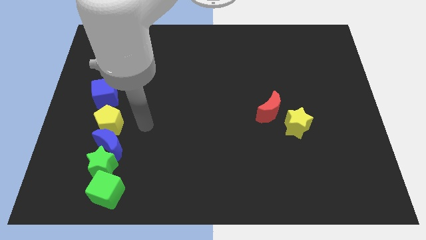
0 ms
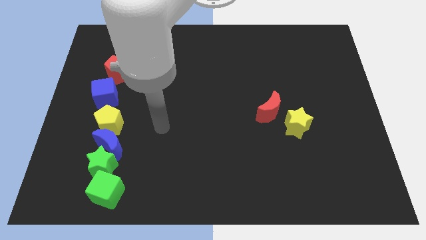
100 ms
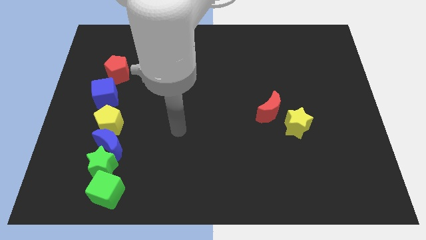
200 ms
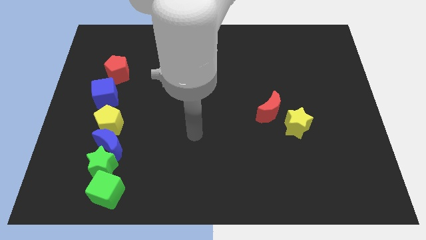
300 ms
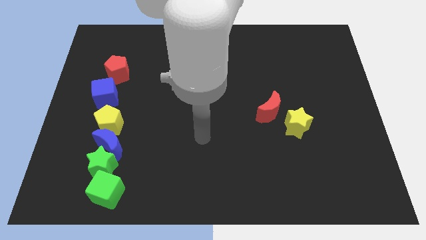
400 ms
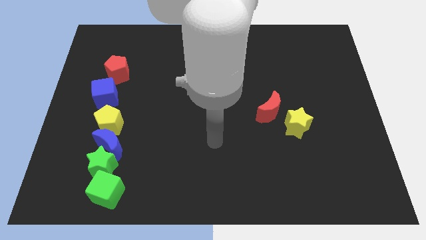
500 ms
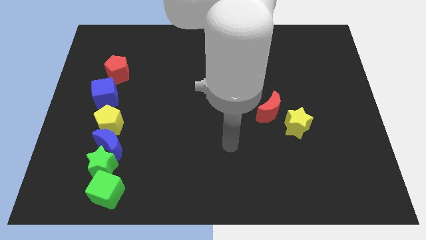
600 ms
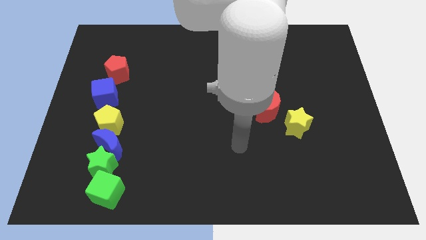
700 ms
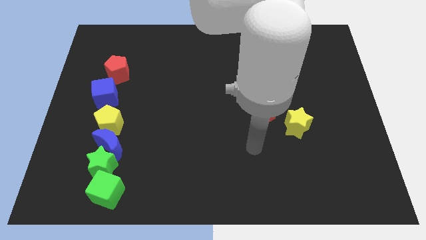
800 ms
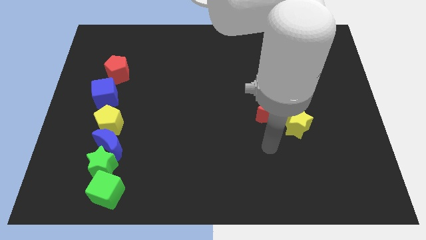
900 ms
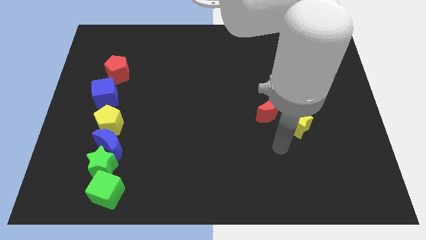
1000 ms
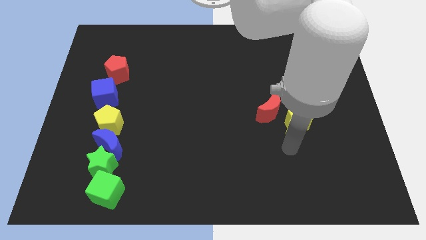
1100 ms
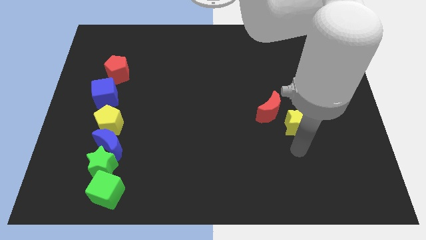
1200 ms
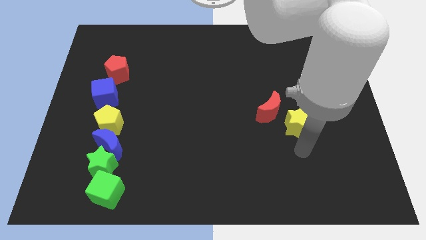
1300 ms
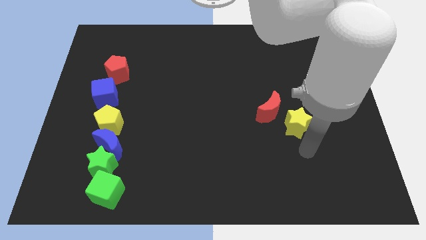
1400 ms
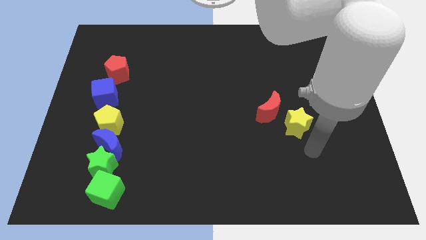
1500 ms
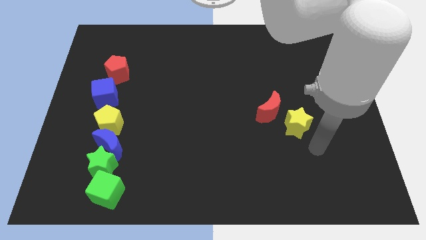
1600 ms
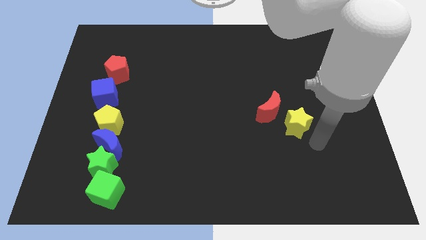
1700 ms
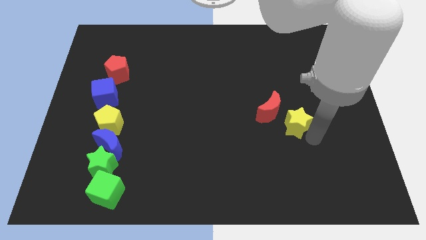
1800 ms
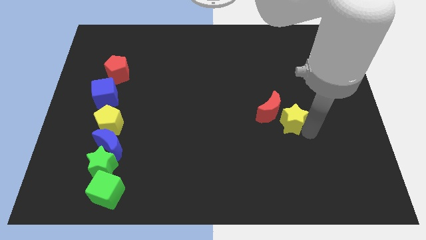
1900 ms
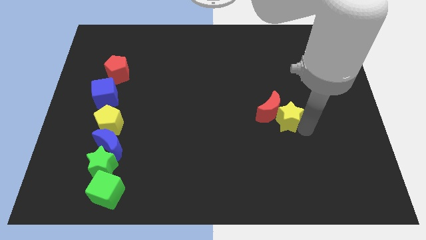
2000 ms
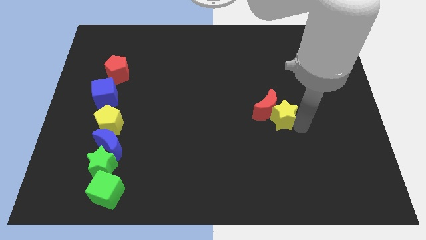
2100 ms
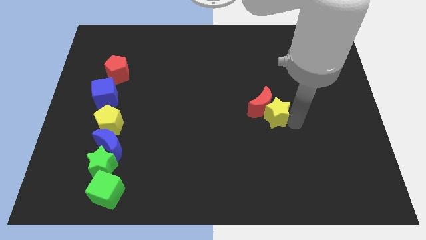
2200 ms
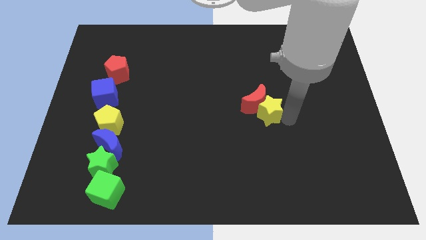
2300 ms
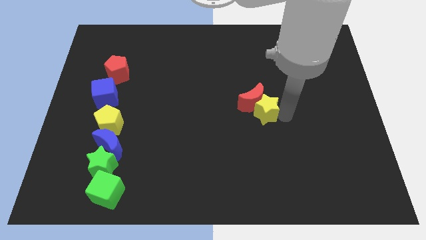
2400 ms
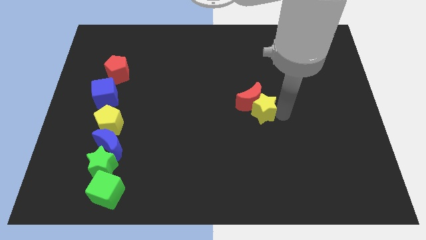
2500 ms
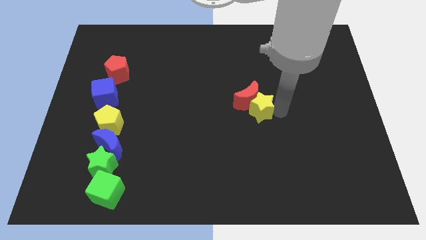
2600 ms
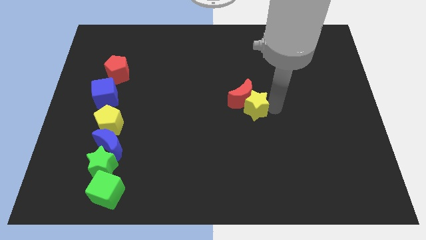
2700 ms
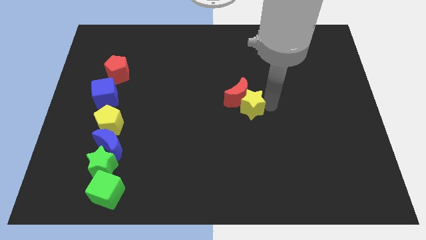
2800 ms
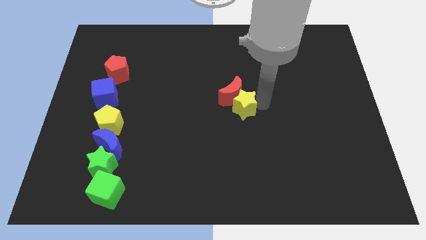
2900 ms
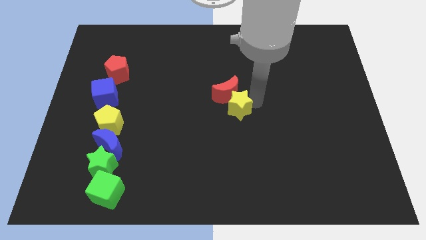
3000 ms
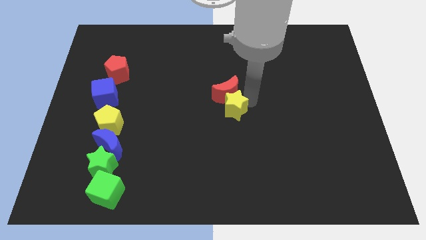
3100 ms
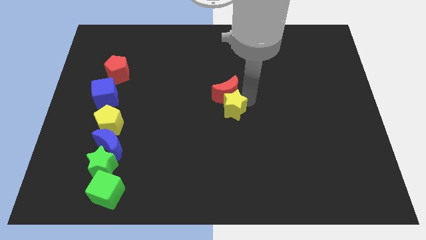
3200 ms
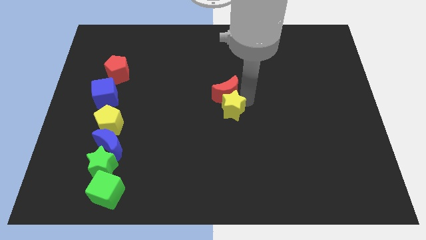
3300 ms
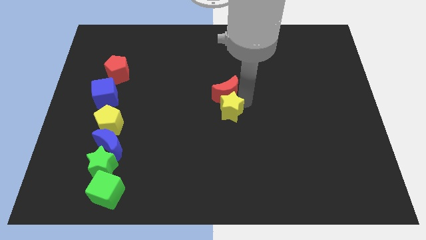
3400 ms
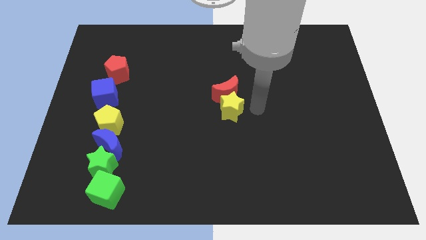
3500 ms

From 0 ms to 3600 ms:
move the yellow star to the bottom side of the red moon

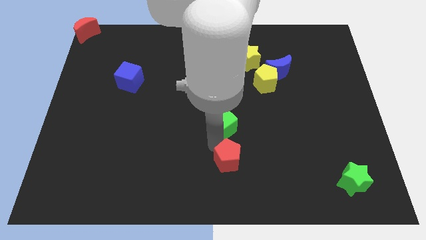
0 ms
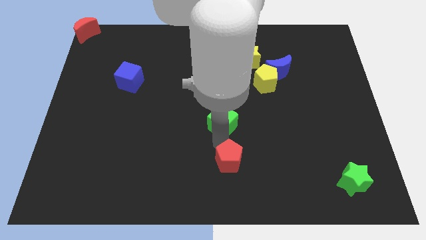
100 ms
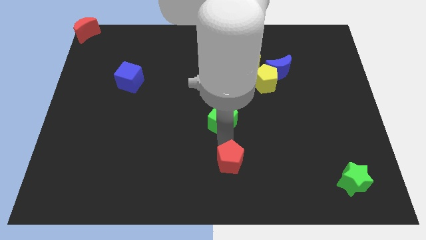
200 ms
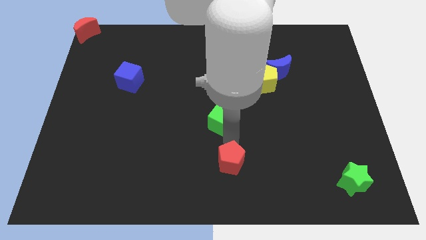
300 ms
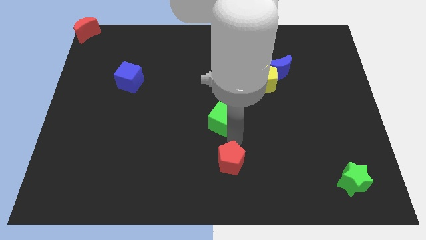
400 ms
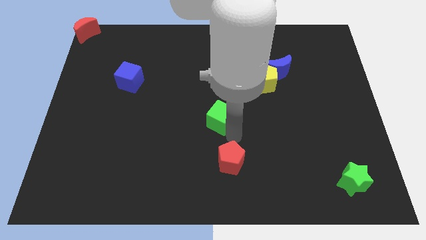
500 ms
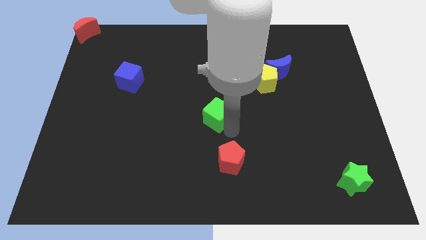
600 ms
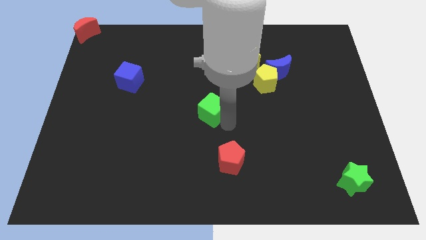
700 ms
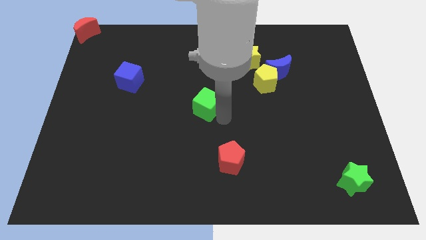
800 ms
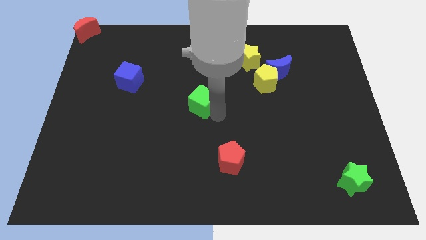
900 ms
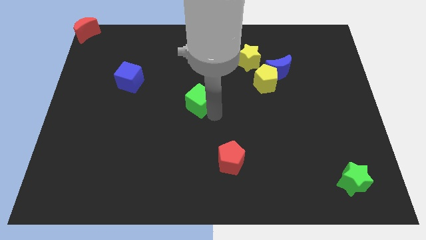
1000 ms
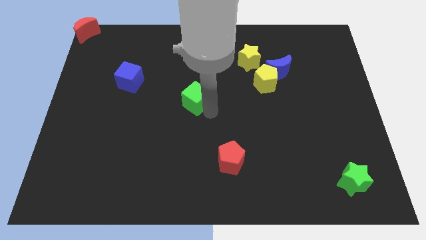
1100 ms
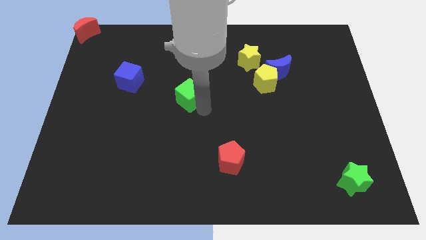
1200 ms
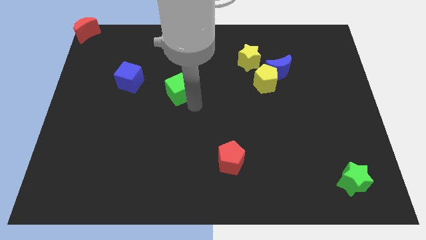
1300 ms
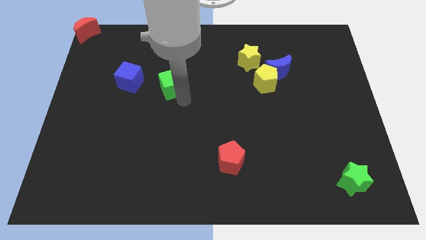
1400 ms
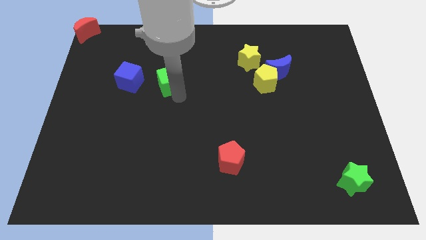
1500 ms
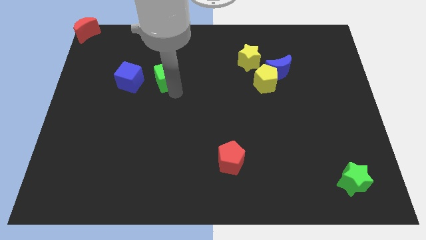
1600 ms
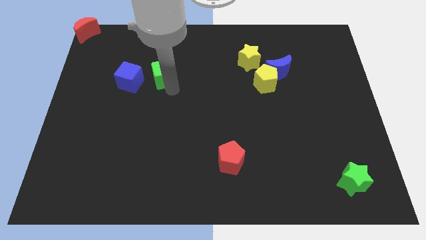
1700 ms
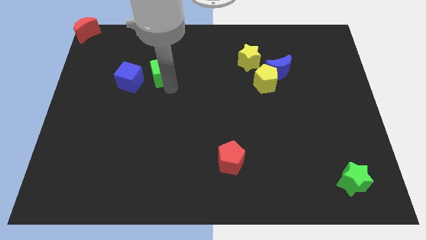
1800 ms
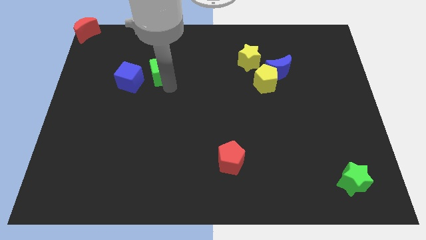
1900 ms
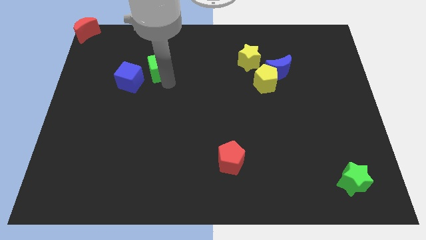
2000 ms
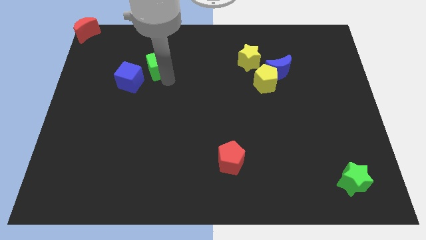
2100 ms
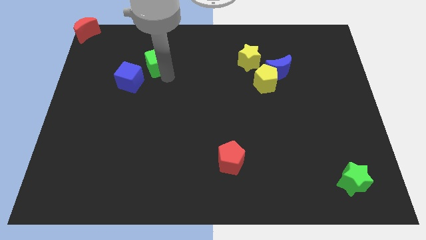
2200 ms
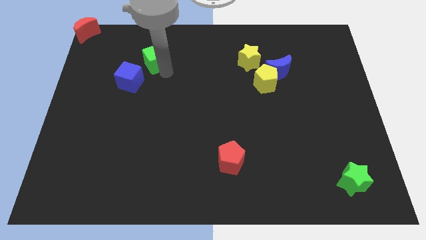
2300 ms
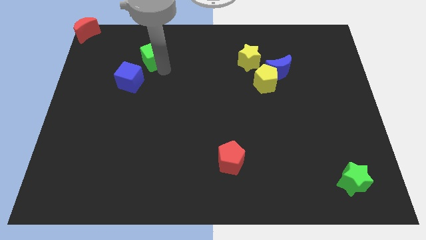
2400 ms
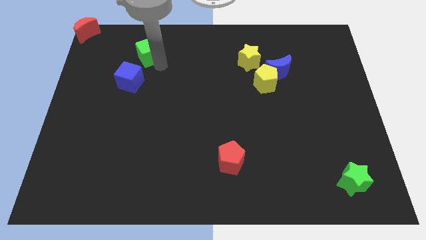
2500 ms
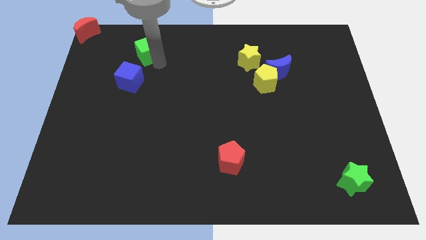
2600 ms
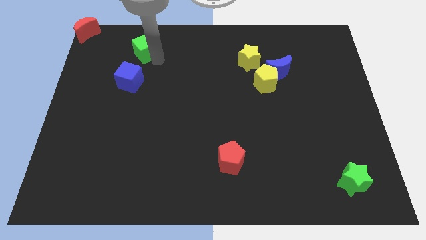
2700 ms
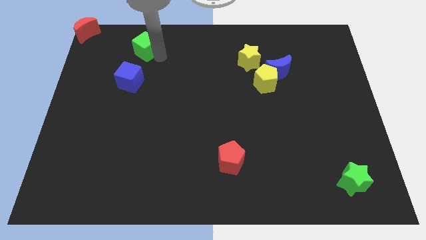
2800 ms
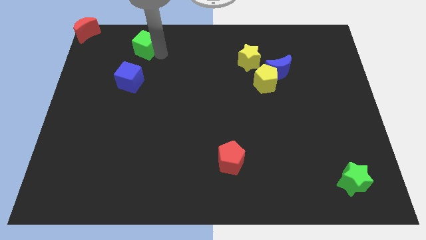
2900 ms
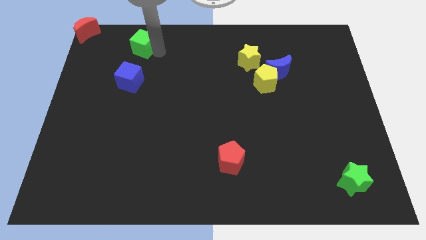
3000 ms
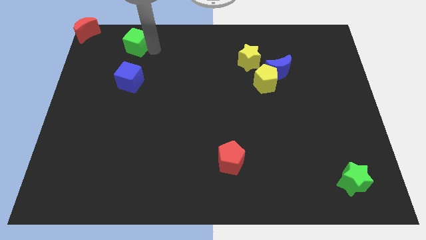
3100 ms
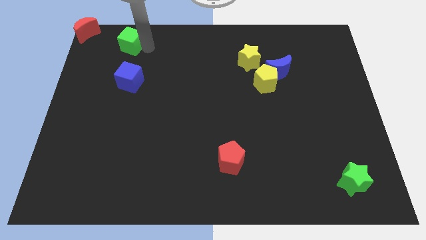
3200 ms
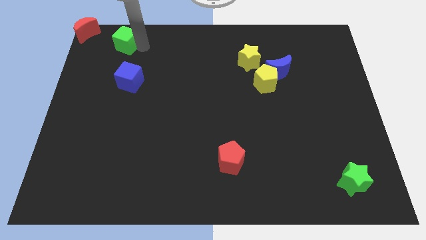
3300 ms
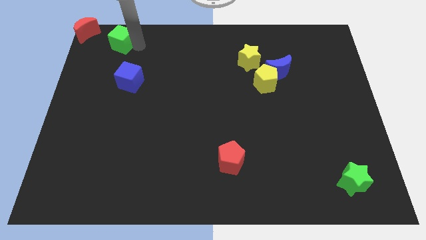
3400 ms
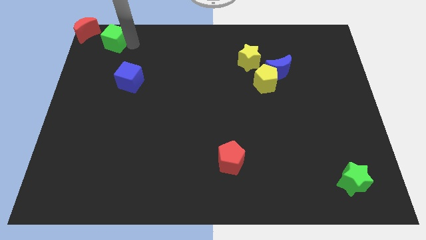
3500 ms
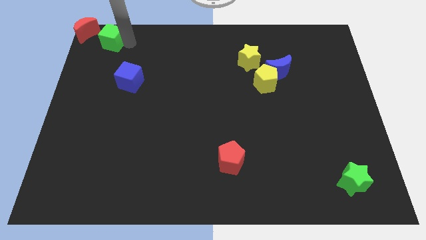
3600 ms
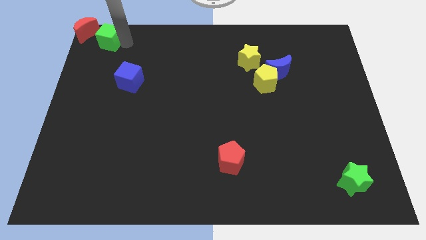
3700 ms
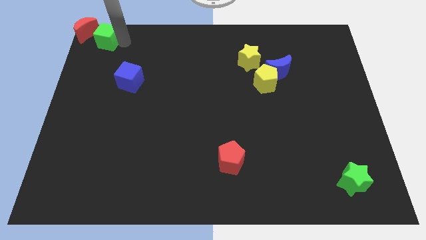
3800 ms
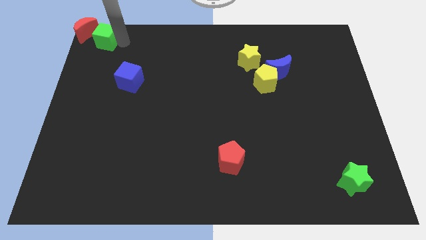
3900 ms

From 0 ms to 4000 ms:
place the green cube above the blue cube

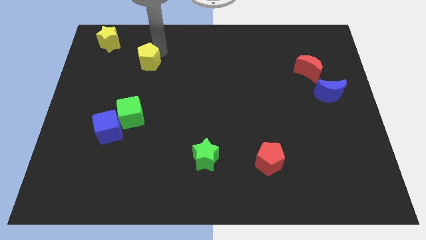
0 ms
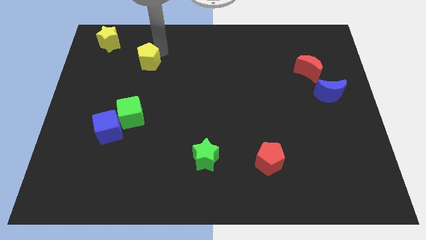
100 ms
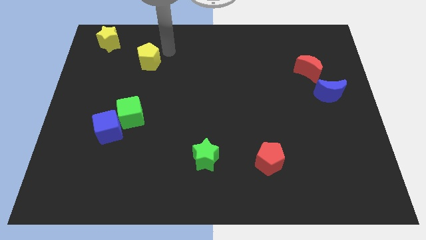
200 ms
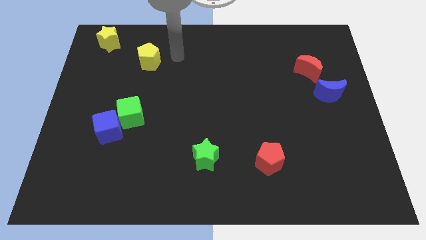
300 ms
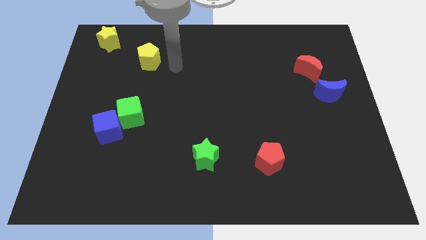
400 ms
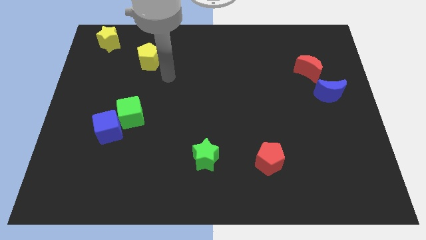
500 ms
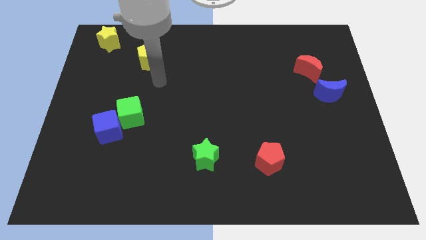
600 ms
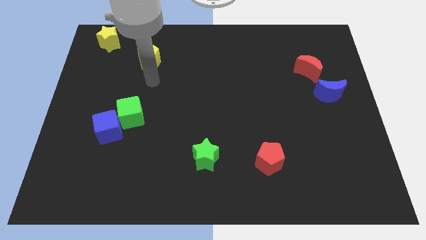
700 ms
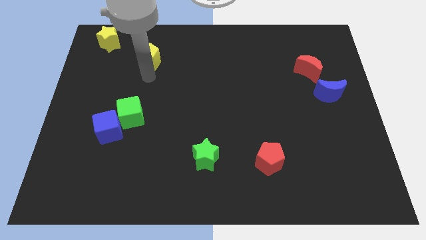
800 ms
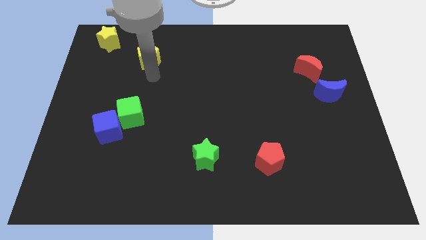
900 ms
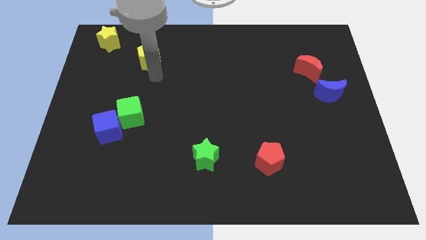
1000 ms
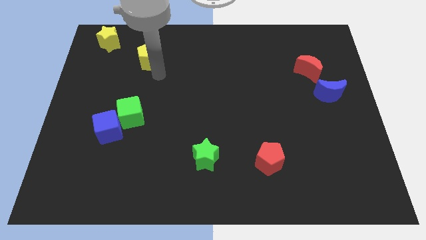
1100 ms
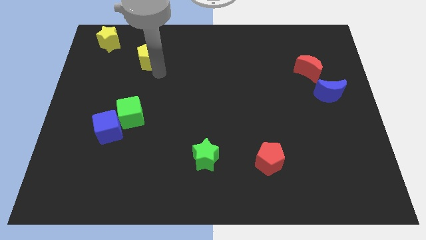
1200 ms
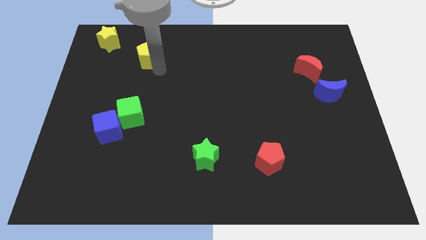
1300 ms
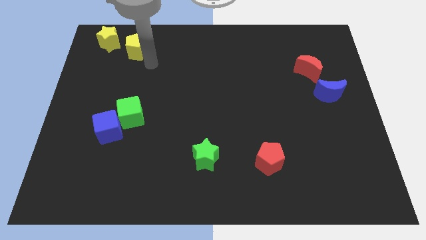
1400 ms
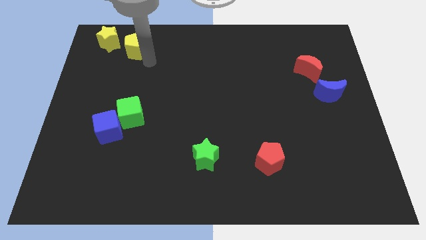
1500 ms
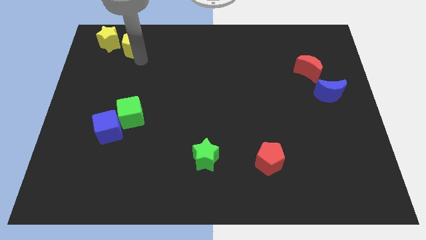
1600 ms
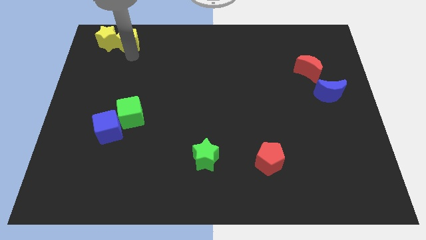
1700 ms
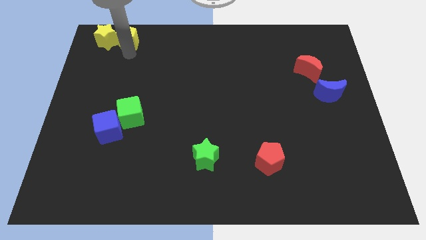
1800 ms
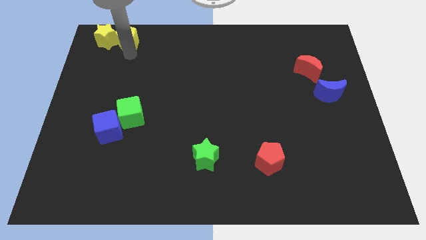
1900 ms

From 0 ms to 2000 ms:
place the yellow pentagon to the right side of the yellow star
